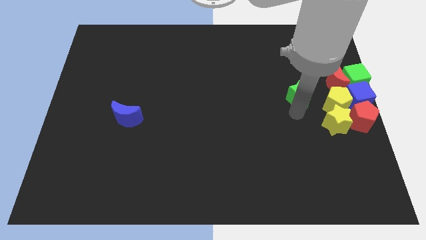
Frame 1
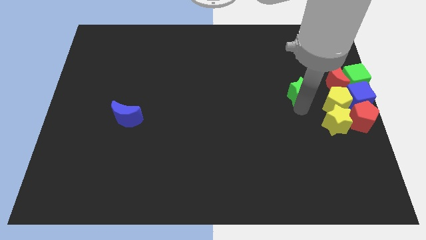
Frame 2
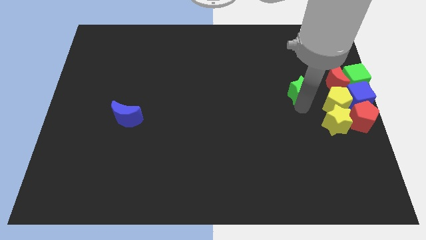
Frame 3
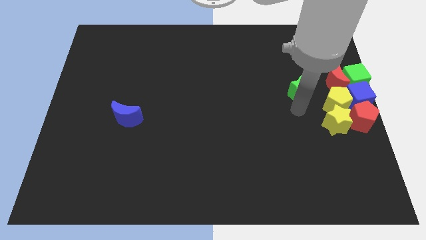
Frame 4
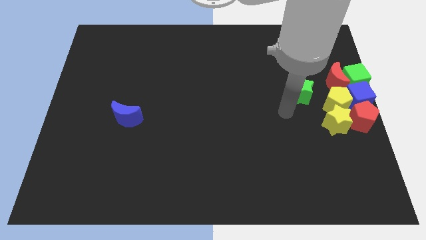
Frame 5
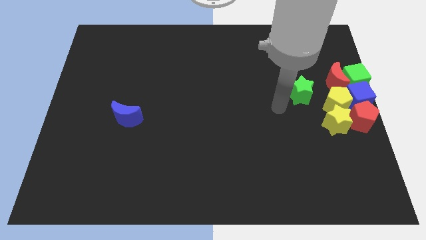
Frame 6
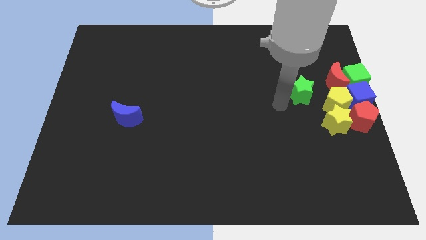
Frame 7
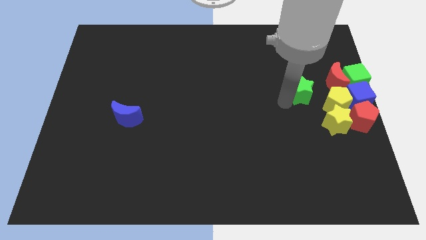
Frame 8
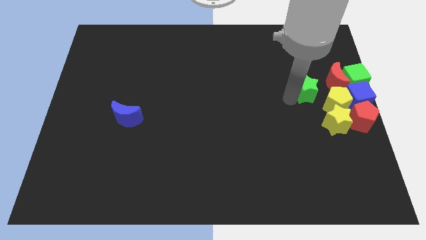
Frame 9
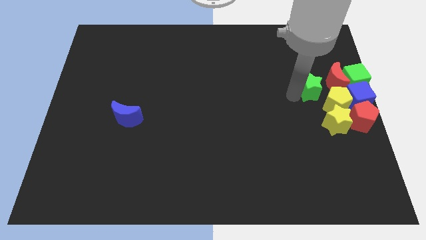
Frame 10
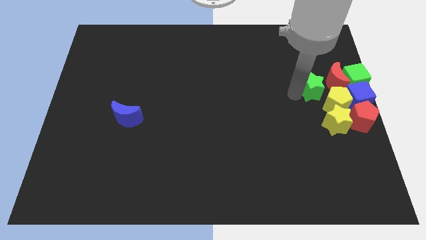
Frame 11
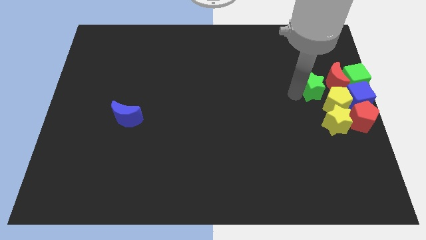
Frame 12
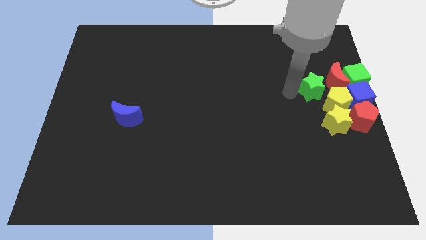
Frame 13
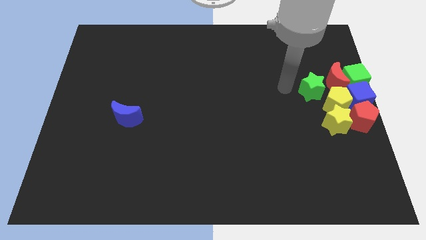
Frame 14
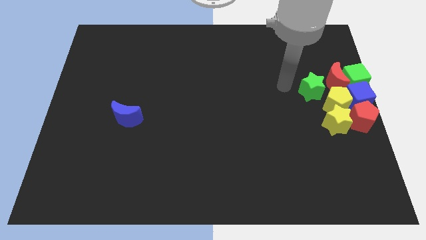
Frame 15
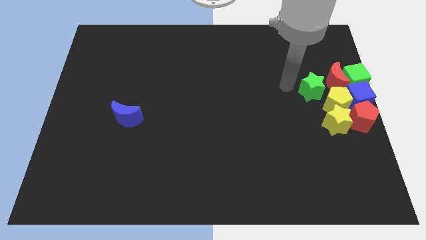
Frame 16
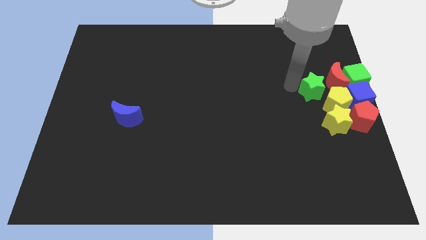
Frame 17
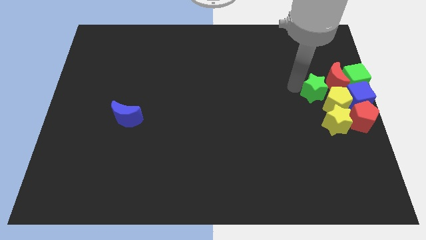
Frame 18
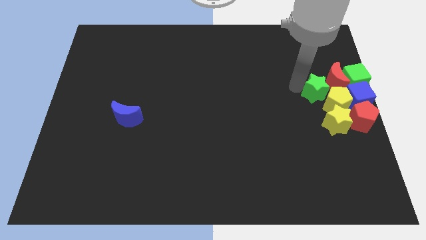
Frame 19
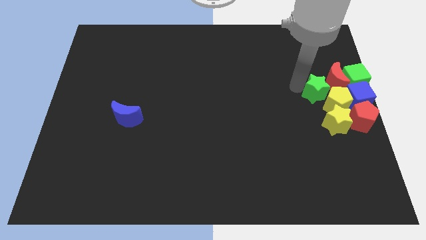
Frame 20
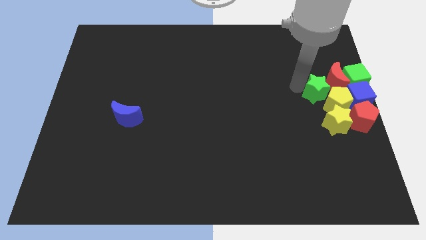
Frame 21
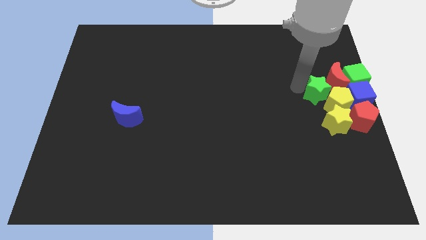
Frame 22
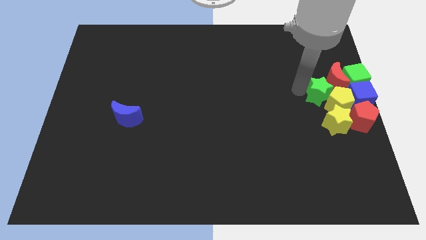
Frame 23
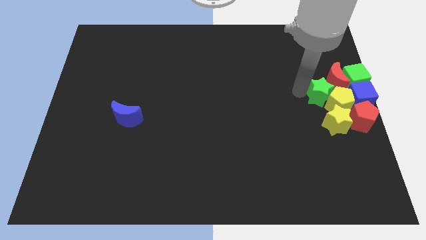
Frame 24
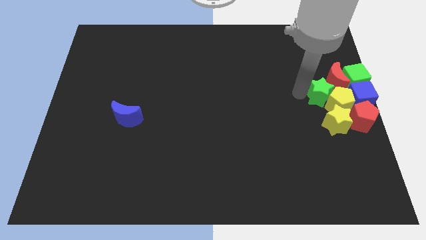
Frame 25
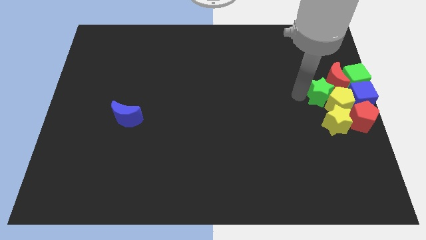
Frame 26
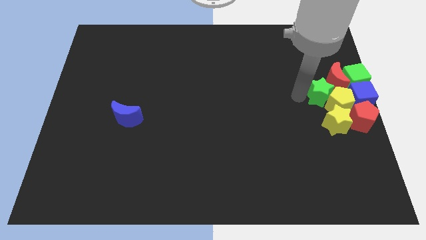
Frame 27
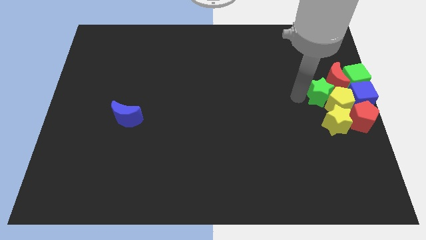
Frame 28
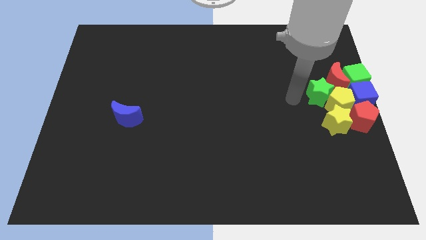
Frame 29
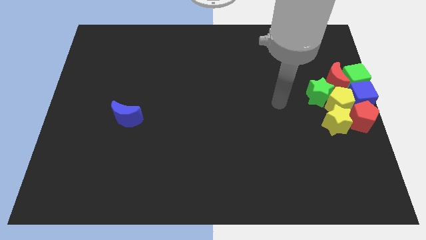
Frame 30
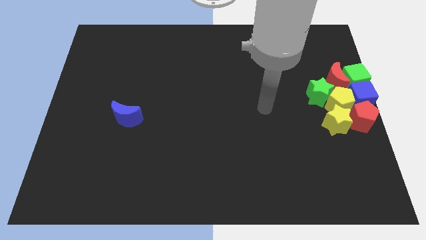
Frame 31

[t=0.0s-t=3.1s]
push the green star into the yellow pentagon

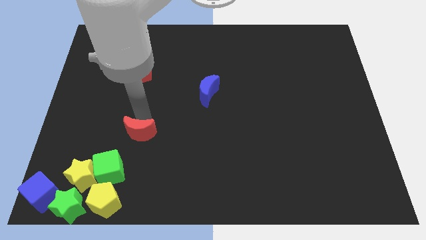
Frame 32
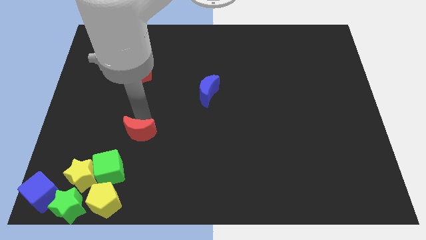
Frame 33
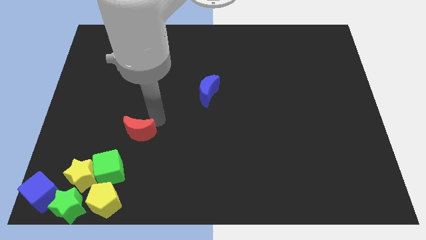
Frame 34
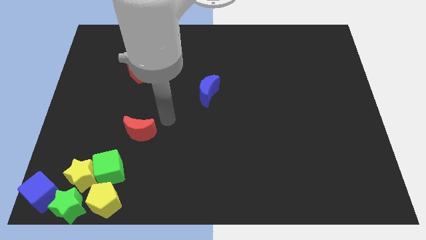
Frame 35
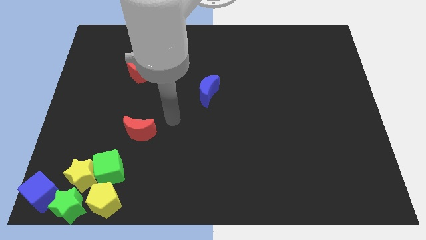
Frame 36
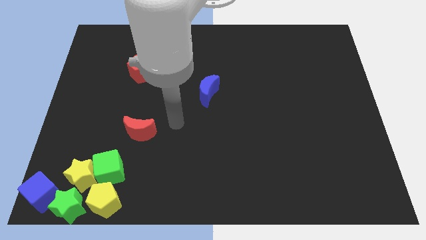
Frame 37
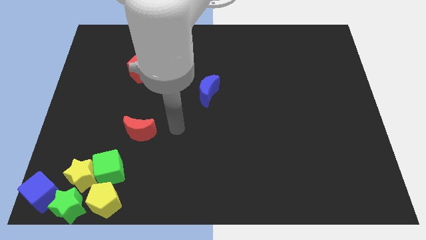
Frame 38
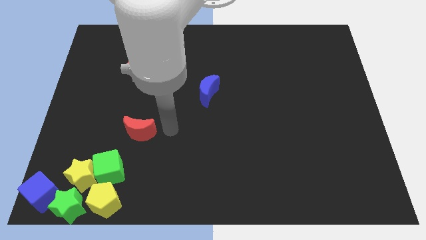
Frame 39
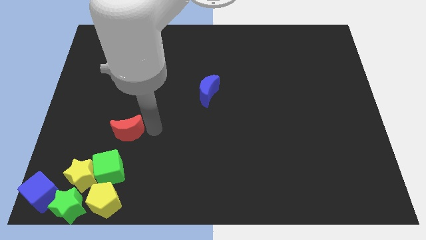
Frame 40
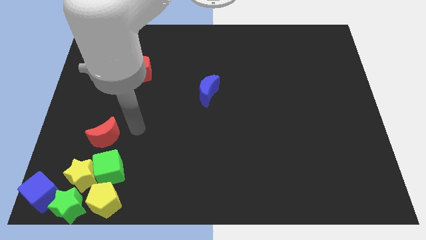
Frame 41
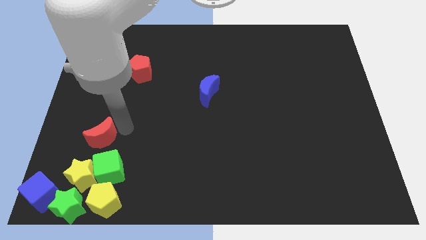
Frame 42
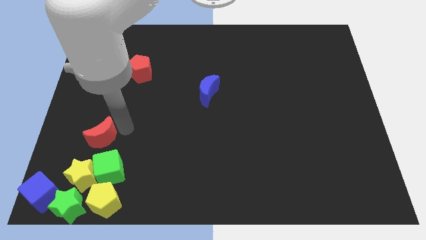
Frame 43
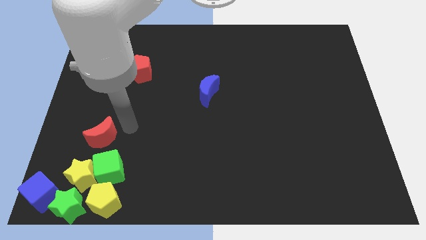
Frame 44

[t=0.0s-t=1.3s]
push the red moon above to the green cube

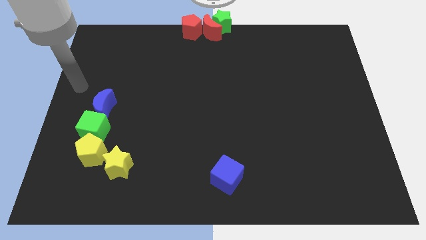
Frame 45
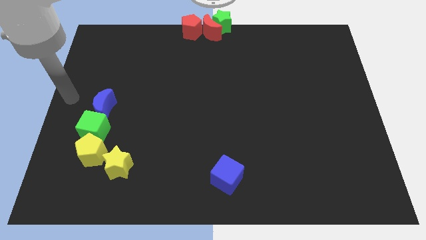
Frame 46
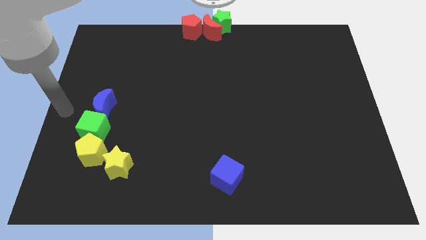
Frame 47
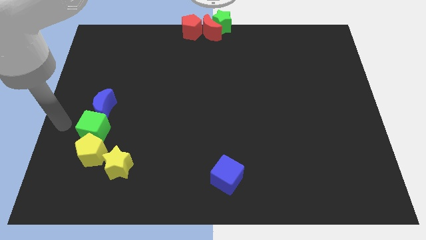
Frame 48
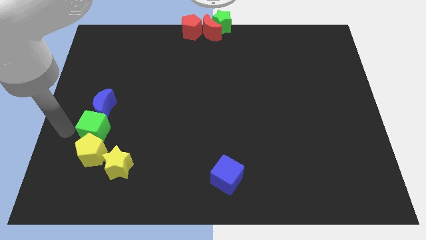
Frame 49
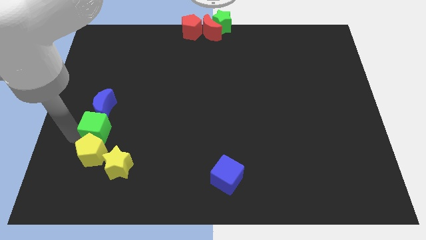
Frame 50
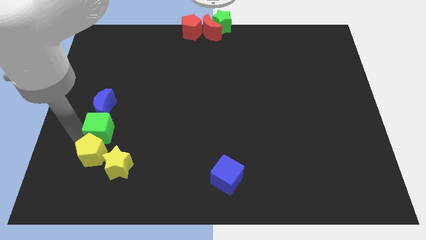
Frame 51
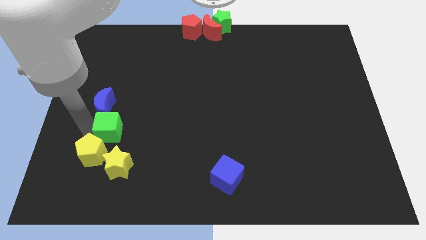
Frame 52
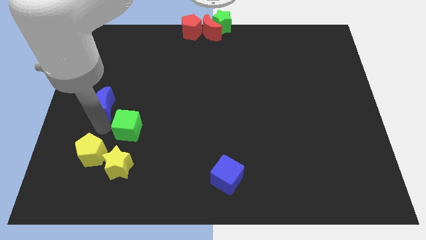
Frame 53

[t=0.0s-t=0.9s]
slightly move the green cube towards the right

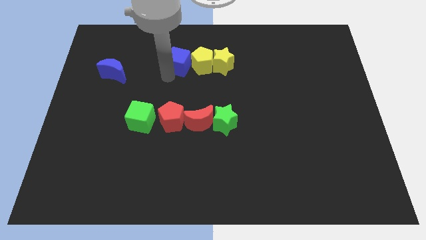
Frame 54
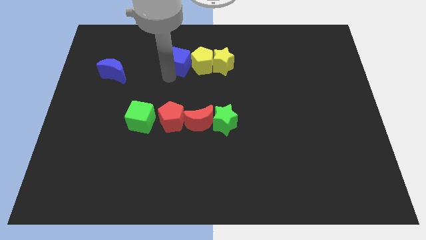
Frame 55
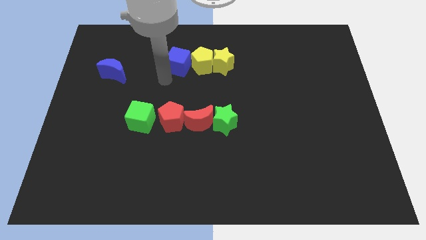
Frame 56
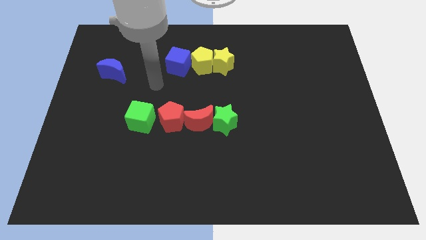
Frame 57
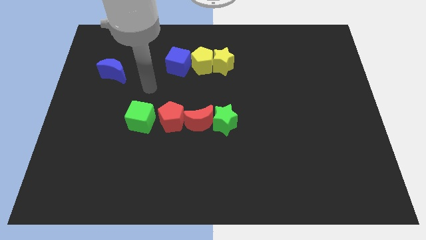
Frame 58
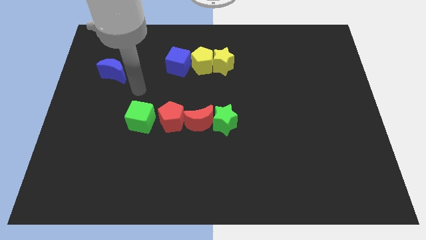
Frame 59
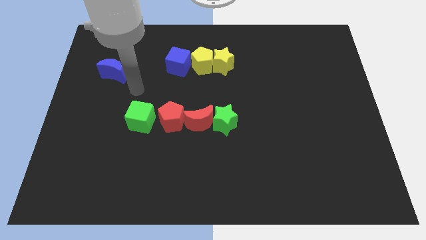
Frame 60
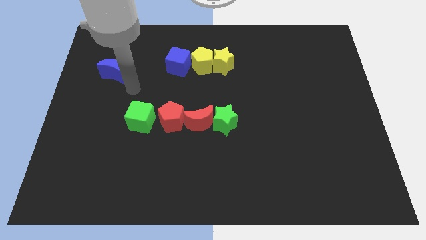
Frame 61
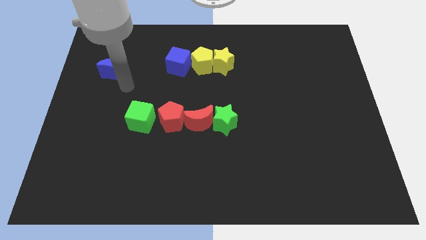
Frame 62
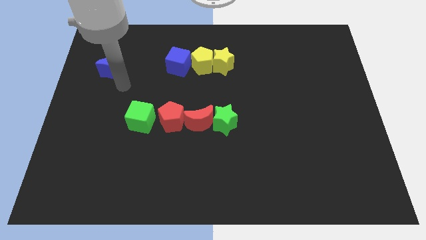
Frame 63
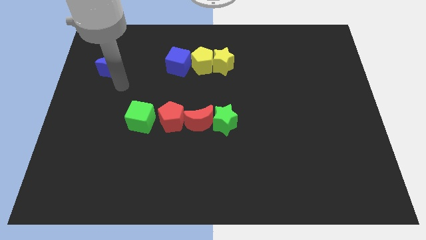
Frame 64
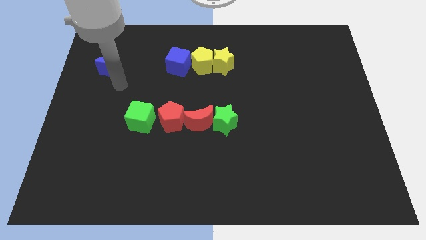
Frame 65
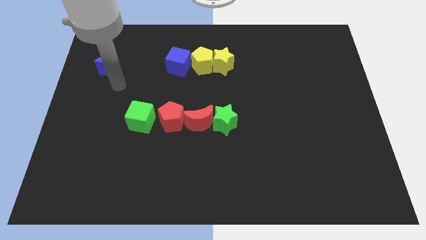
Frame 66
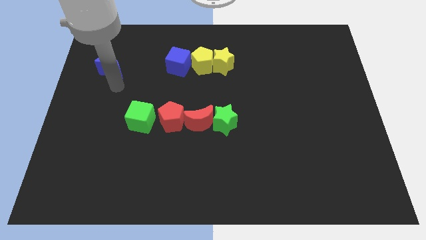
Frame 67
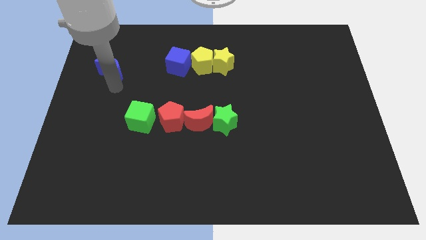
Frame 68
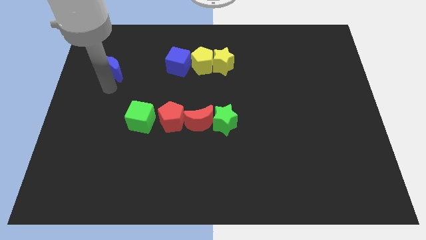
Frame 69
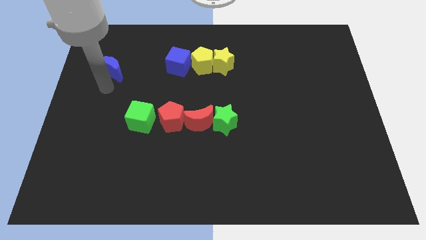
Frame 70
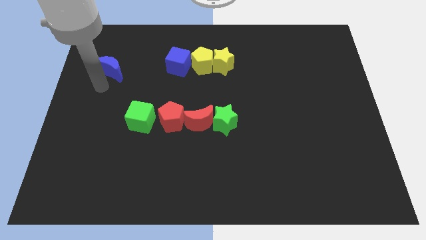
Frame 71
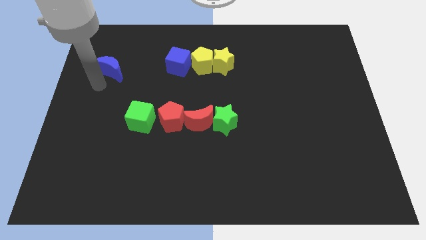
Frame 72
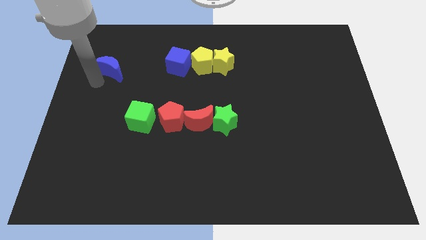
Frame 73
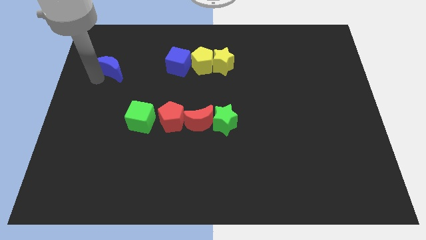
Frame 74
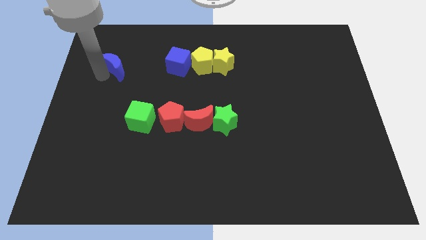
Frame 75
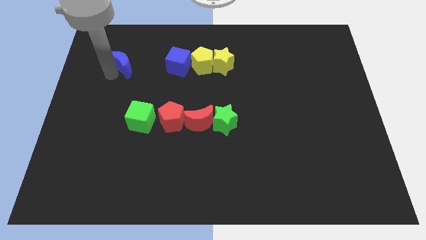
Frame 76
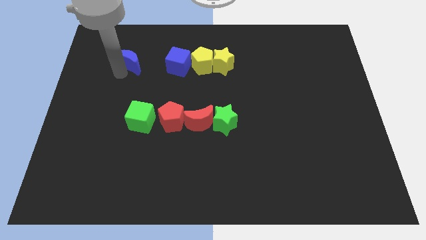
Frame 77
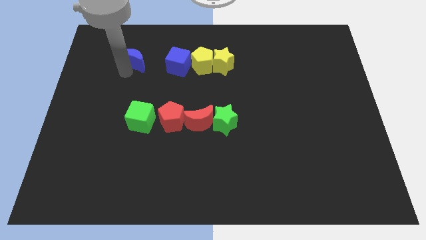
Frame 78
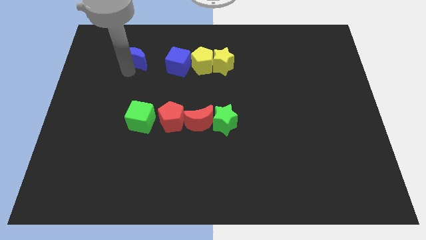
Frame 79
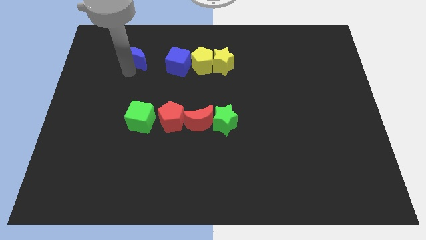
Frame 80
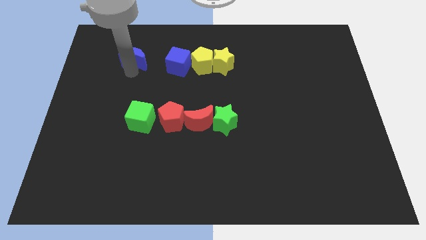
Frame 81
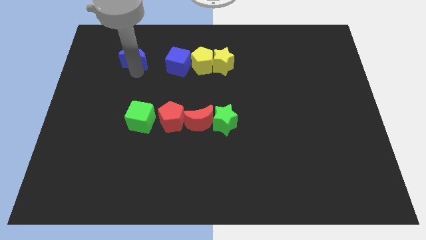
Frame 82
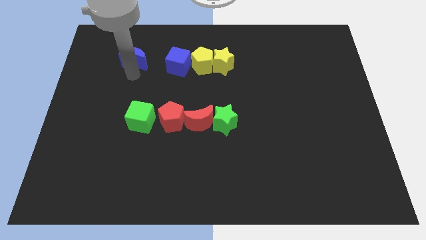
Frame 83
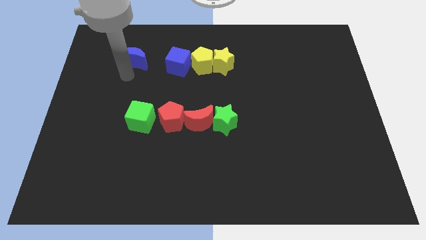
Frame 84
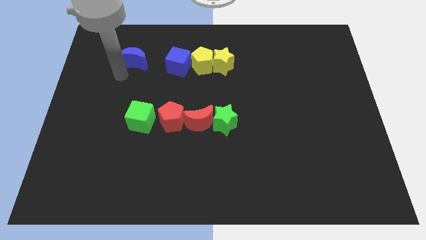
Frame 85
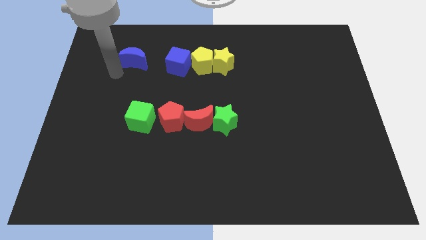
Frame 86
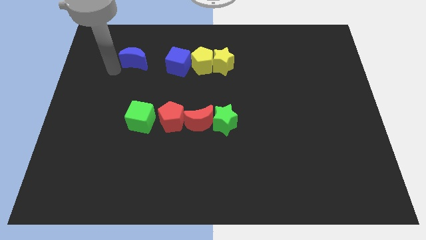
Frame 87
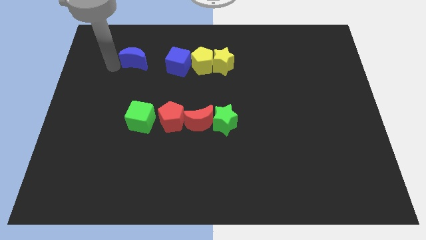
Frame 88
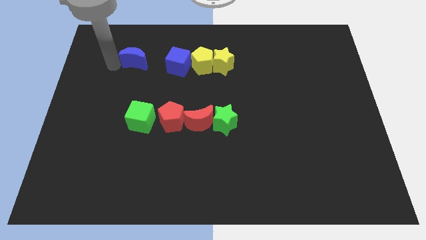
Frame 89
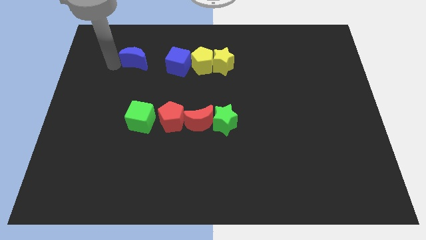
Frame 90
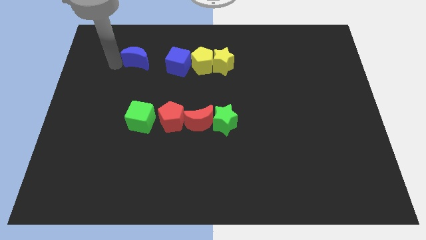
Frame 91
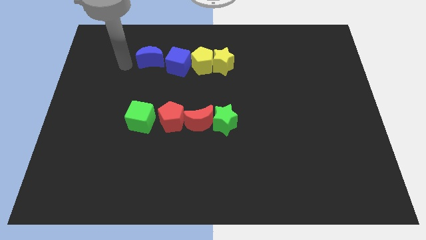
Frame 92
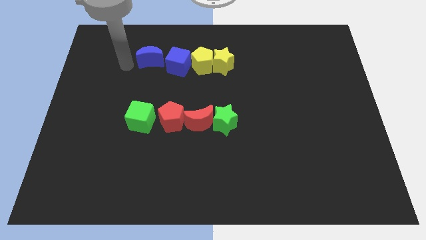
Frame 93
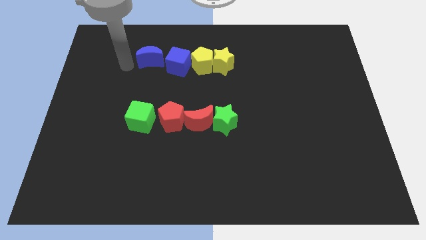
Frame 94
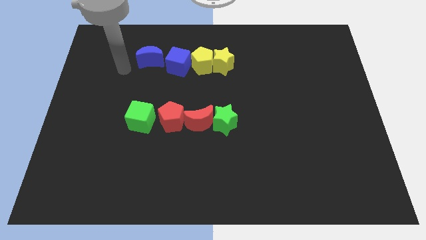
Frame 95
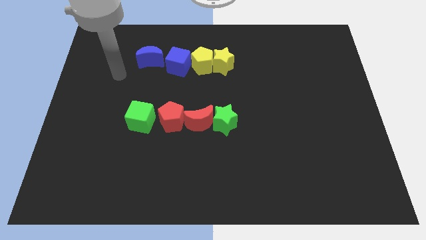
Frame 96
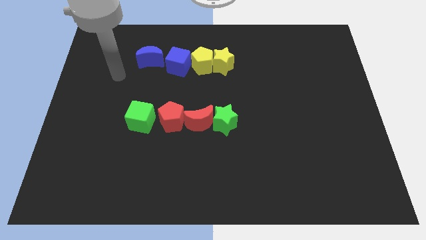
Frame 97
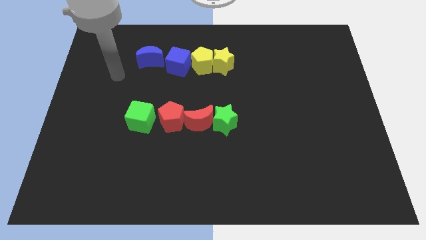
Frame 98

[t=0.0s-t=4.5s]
place the blue moon to the left side of the blue cube
